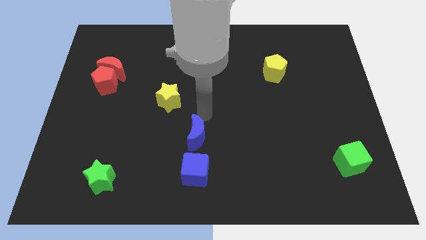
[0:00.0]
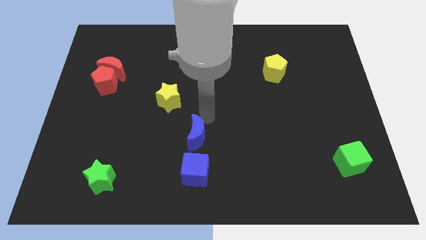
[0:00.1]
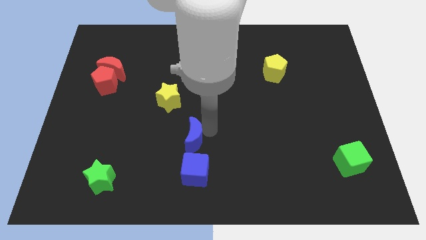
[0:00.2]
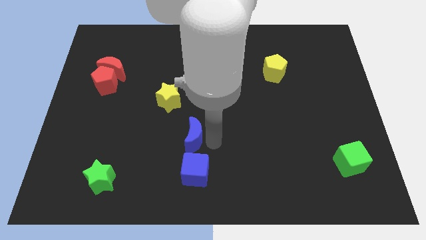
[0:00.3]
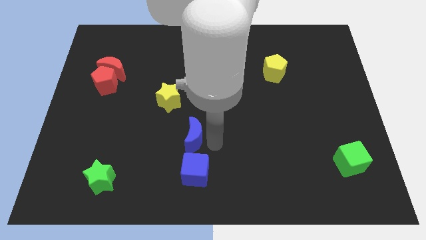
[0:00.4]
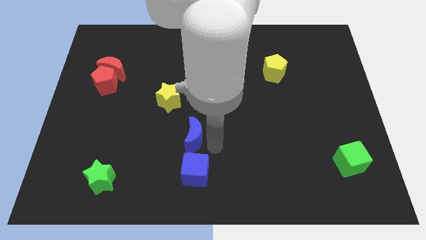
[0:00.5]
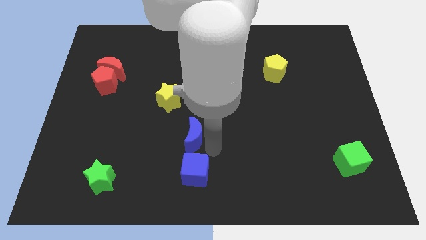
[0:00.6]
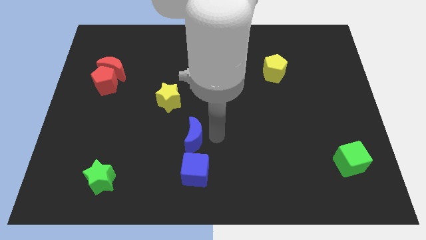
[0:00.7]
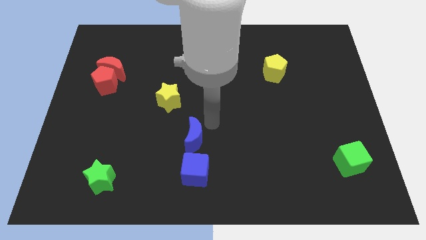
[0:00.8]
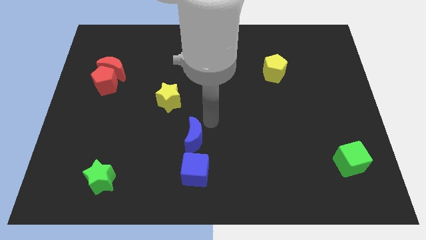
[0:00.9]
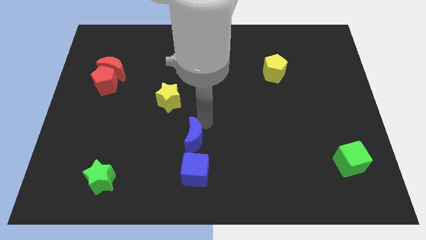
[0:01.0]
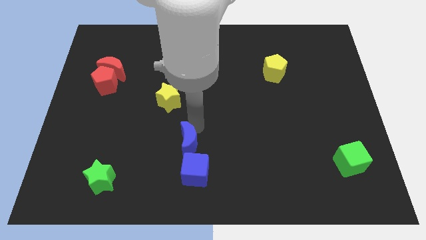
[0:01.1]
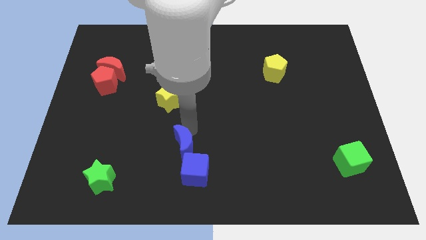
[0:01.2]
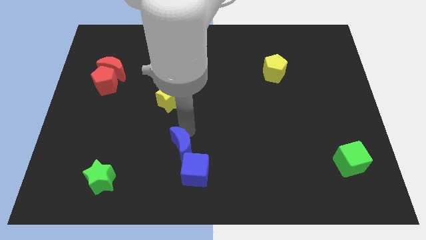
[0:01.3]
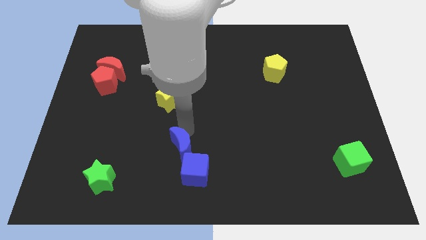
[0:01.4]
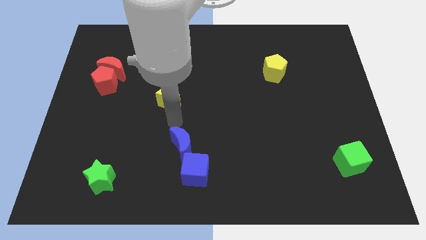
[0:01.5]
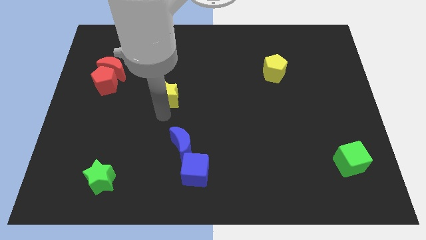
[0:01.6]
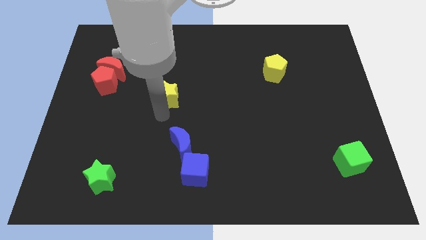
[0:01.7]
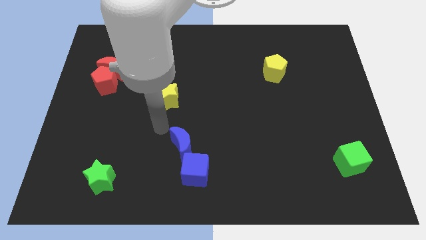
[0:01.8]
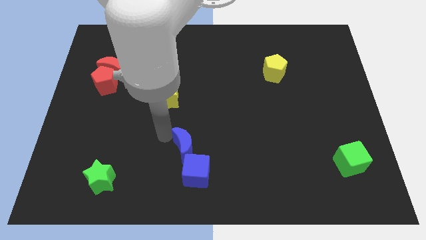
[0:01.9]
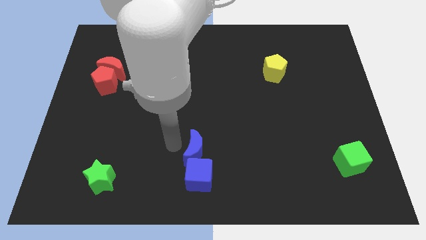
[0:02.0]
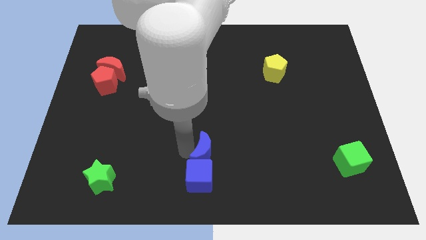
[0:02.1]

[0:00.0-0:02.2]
adjust the blue crescent close to the blue cube

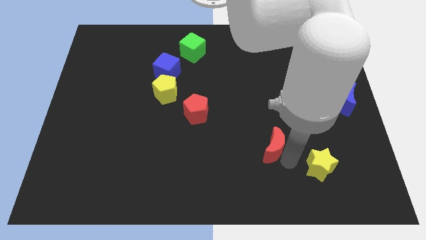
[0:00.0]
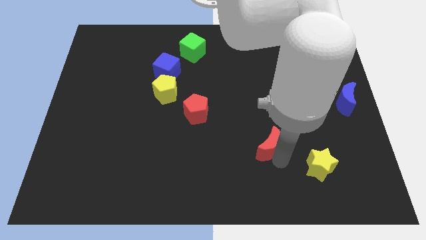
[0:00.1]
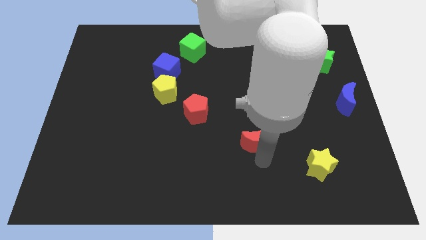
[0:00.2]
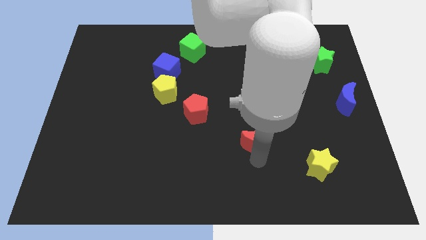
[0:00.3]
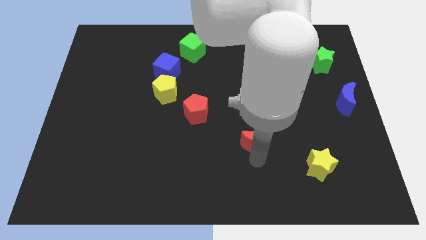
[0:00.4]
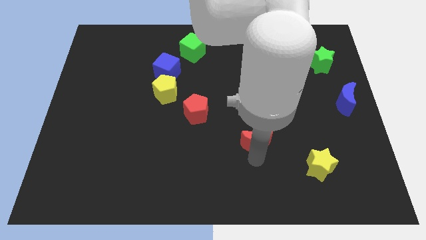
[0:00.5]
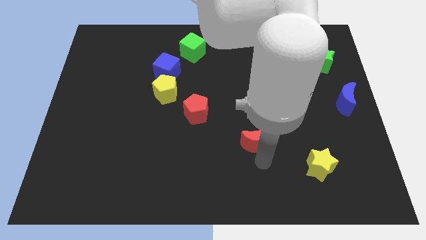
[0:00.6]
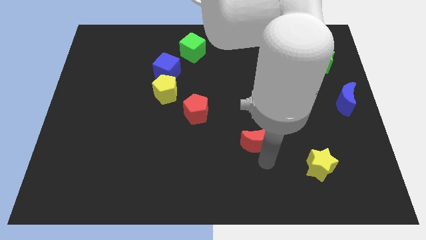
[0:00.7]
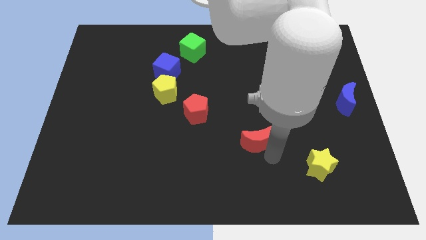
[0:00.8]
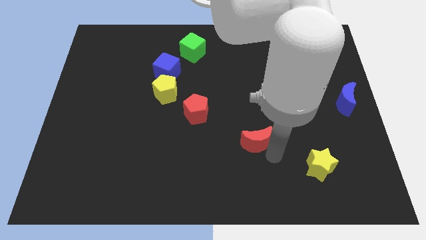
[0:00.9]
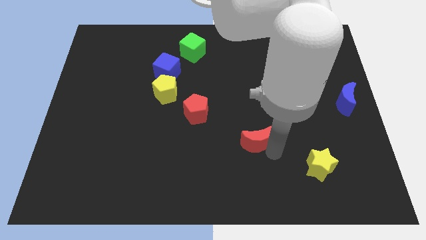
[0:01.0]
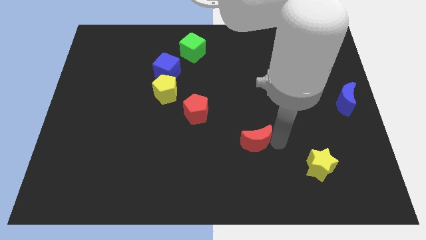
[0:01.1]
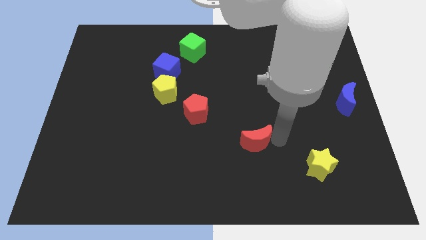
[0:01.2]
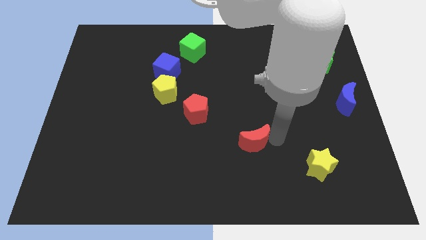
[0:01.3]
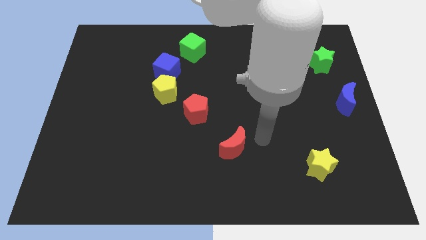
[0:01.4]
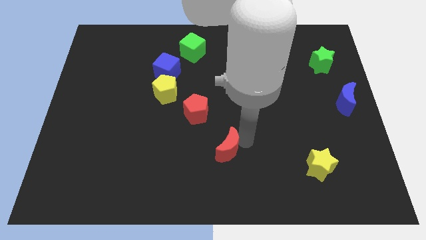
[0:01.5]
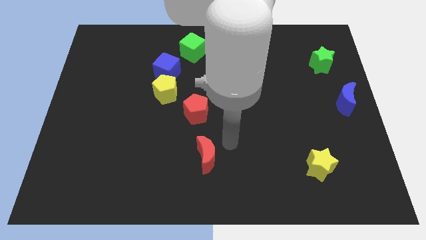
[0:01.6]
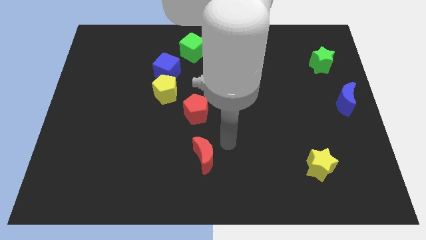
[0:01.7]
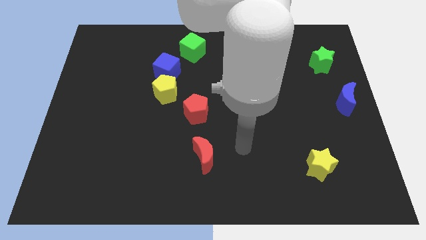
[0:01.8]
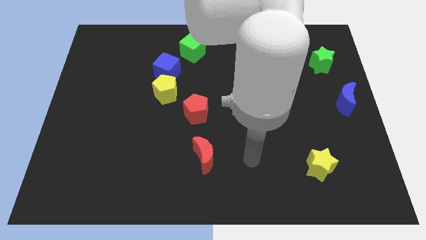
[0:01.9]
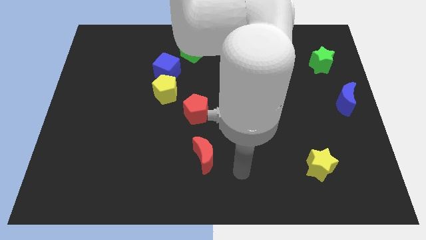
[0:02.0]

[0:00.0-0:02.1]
push the red moon vertically below the red pentagon

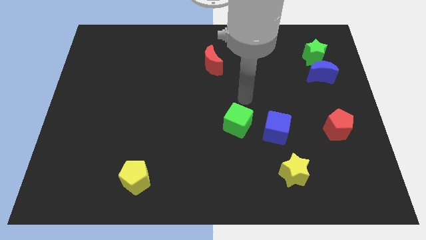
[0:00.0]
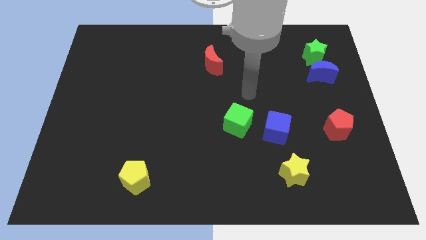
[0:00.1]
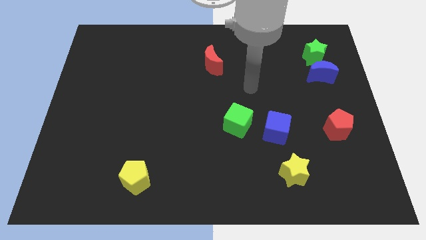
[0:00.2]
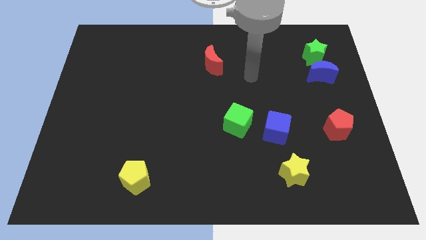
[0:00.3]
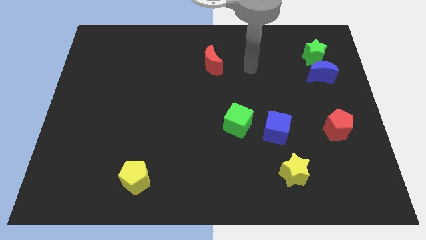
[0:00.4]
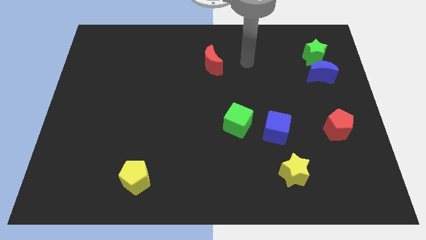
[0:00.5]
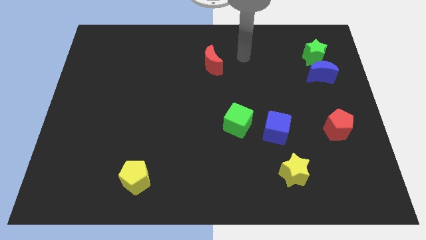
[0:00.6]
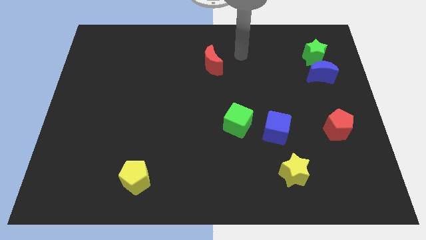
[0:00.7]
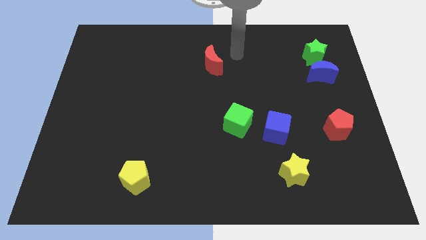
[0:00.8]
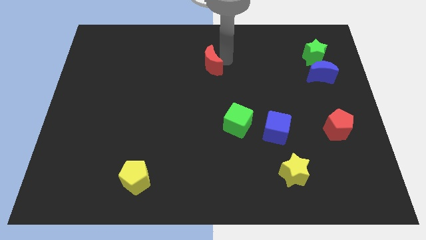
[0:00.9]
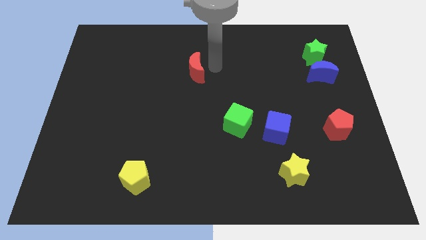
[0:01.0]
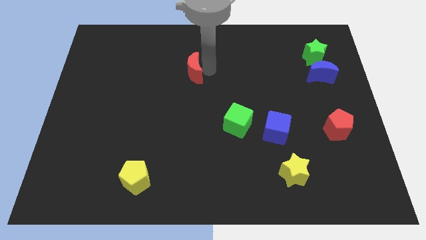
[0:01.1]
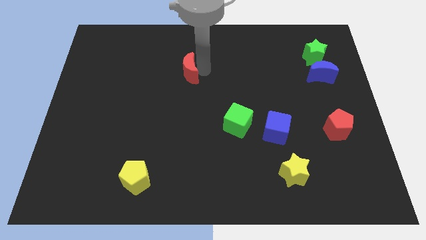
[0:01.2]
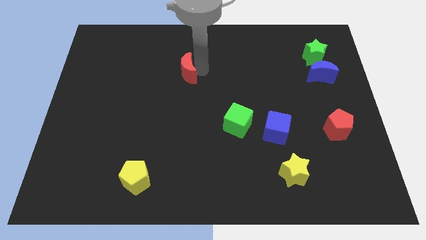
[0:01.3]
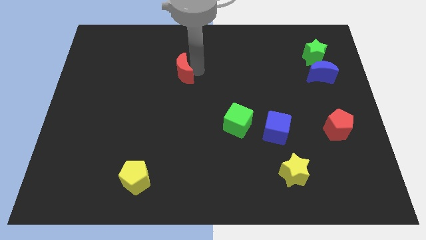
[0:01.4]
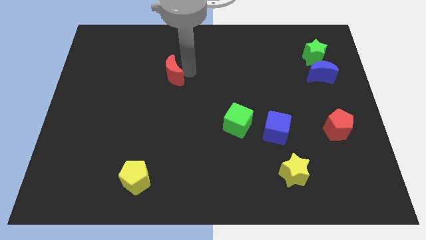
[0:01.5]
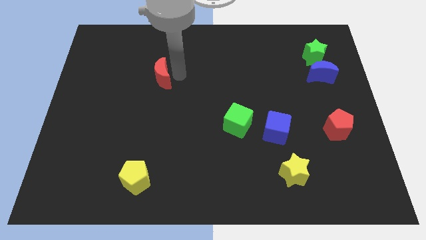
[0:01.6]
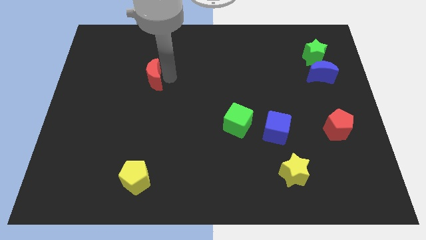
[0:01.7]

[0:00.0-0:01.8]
move the red moon slightly to the left side

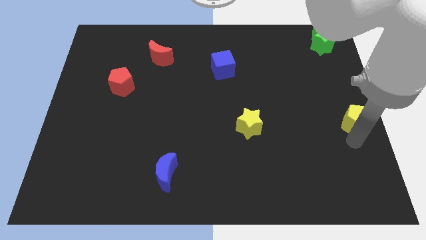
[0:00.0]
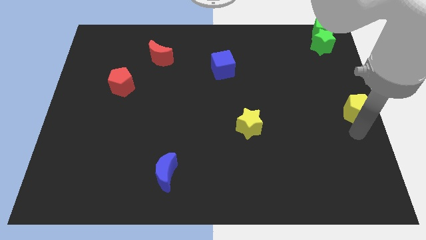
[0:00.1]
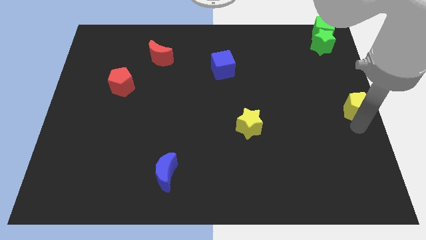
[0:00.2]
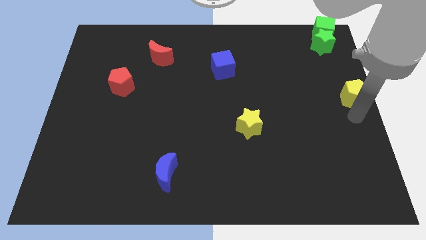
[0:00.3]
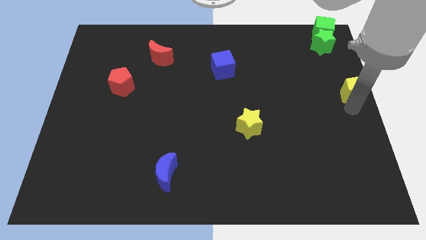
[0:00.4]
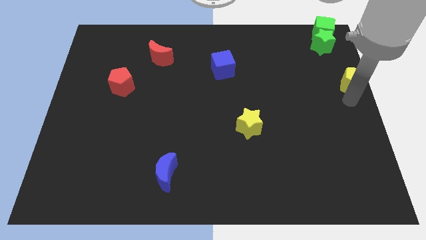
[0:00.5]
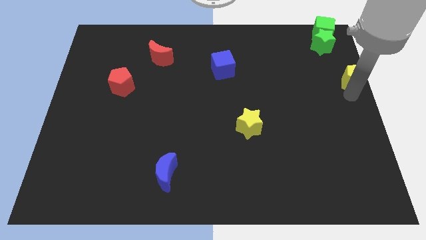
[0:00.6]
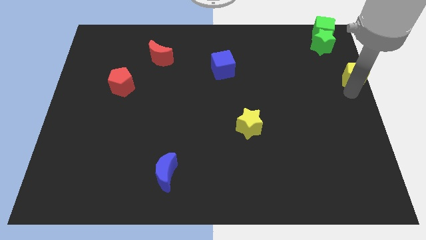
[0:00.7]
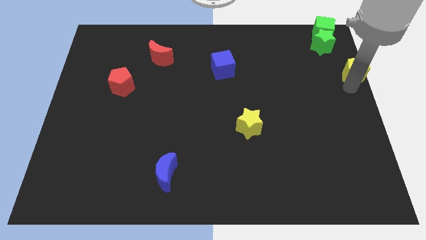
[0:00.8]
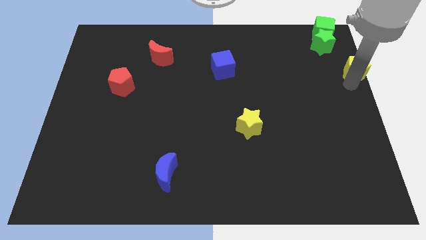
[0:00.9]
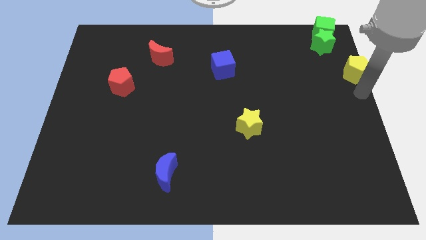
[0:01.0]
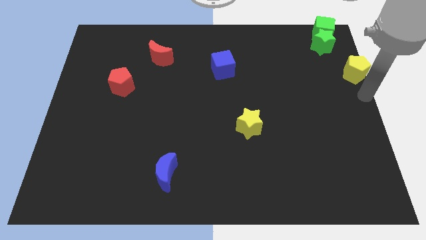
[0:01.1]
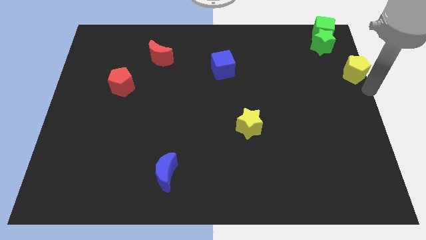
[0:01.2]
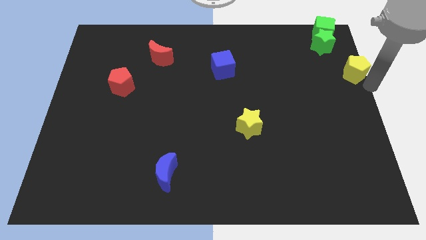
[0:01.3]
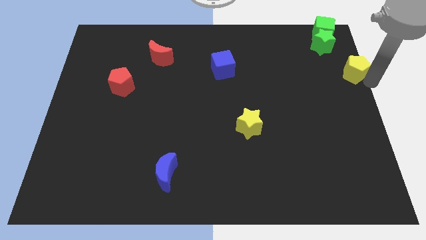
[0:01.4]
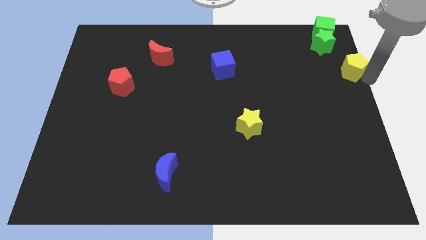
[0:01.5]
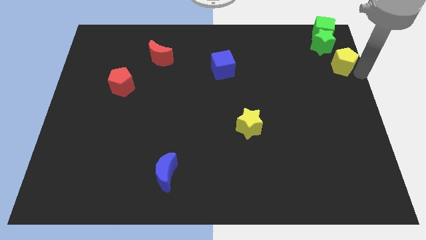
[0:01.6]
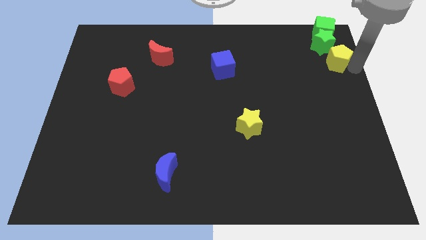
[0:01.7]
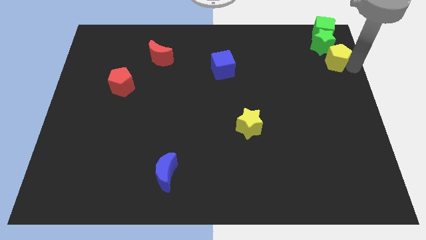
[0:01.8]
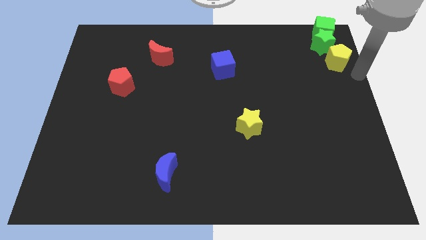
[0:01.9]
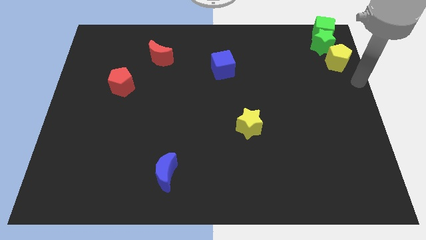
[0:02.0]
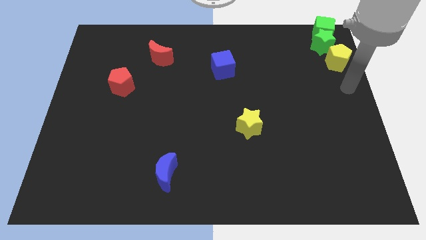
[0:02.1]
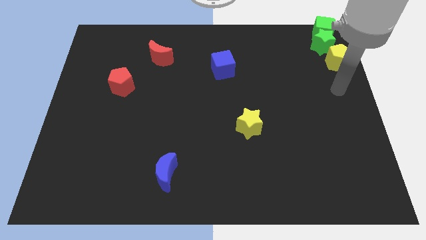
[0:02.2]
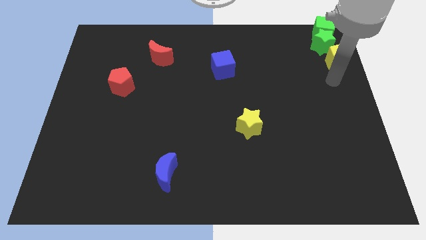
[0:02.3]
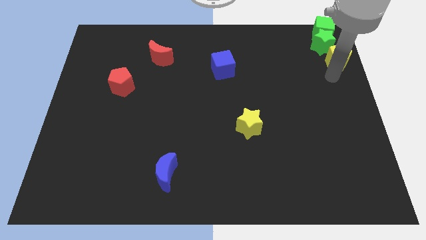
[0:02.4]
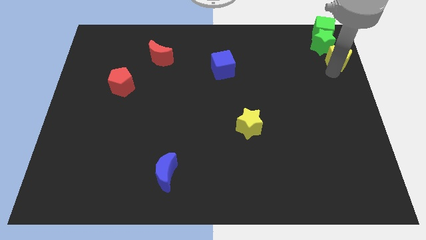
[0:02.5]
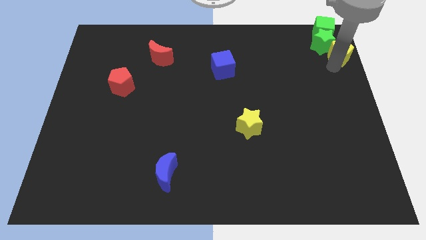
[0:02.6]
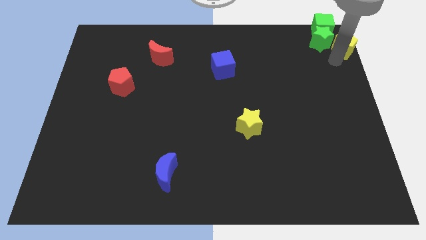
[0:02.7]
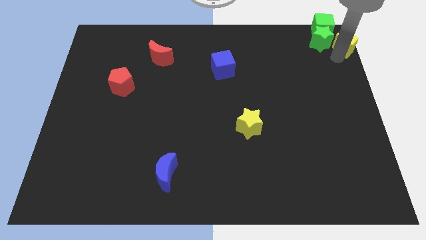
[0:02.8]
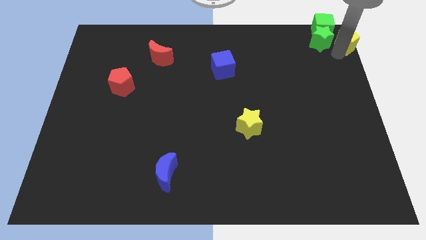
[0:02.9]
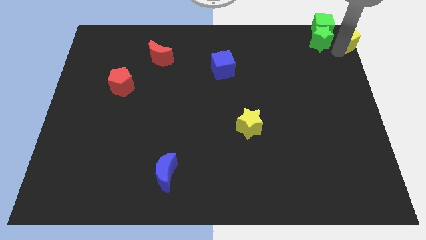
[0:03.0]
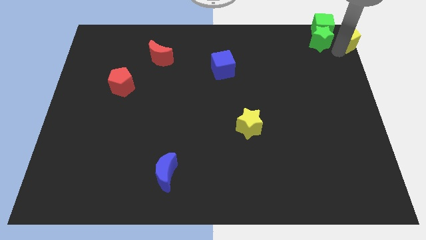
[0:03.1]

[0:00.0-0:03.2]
push the yellow pentagon to the right of the green star
